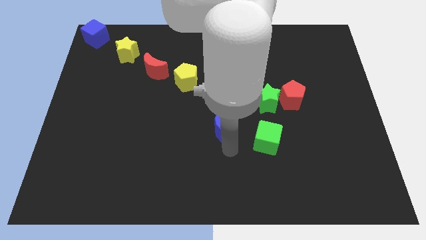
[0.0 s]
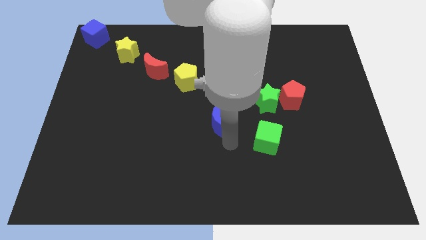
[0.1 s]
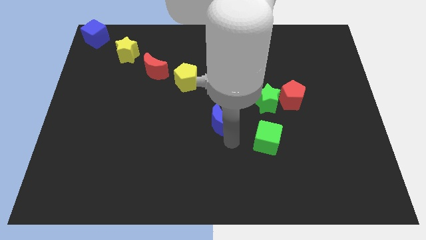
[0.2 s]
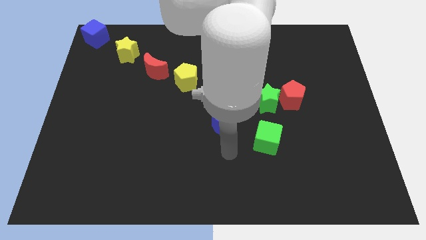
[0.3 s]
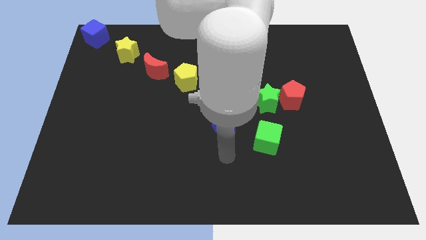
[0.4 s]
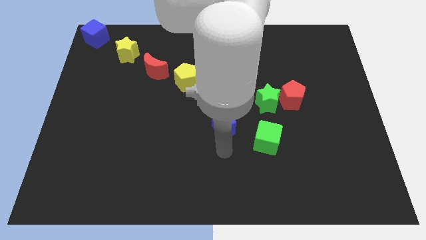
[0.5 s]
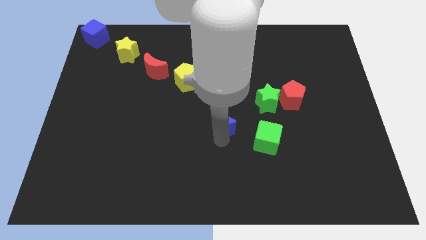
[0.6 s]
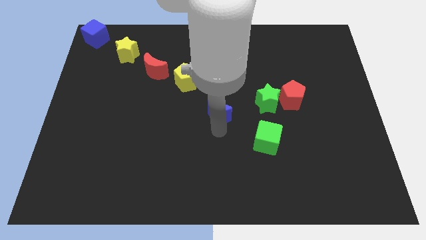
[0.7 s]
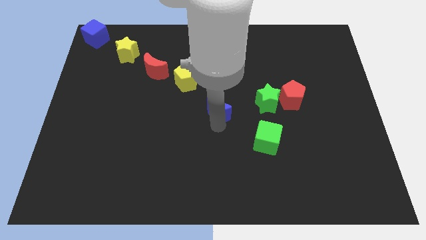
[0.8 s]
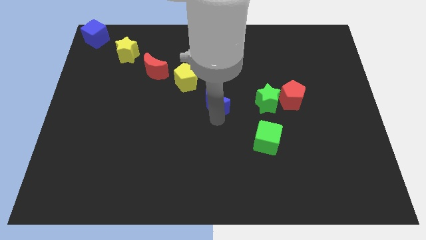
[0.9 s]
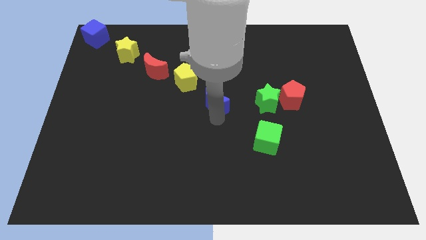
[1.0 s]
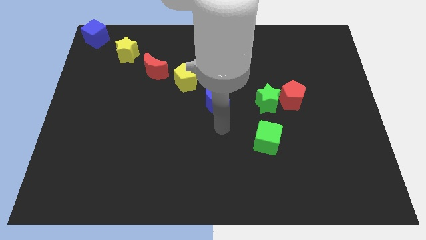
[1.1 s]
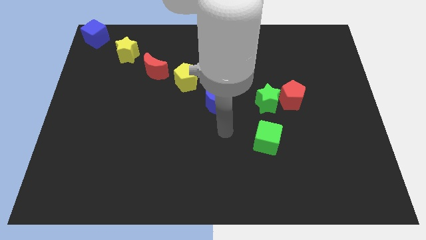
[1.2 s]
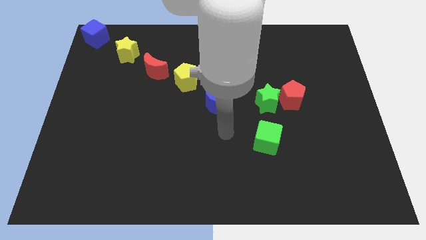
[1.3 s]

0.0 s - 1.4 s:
move the blue crescent to the center of the board

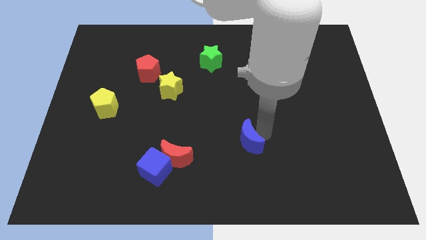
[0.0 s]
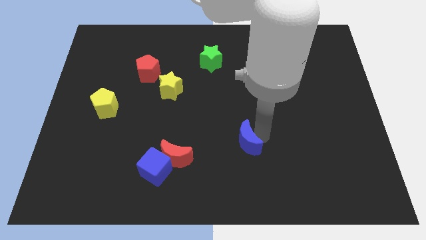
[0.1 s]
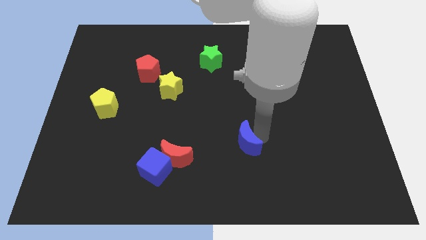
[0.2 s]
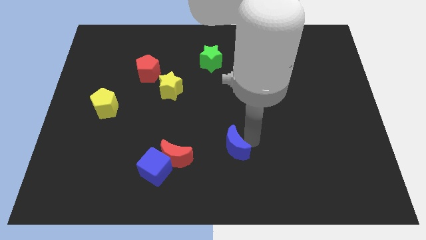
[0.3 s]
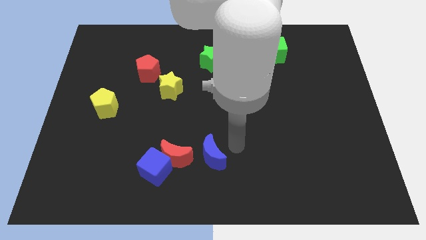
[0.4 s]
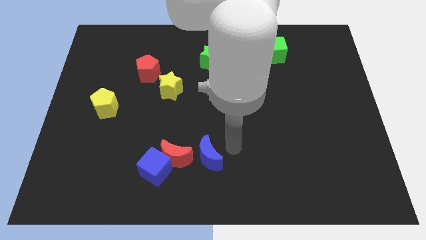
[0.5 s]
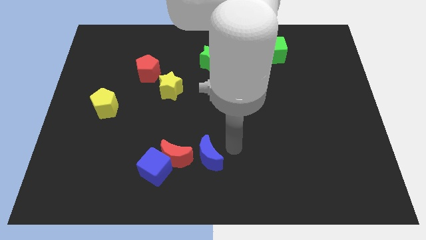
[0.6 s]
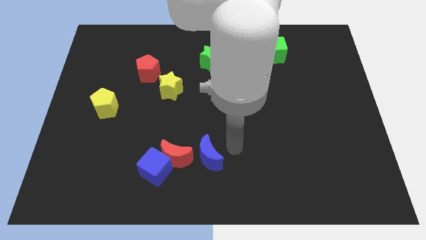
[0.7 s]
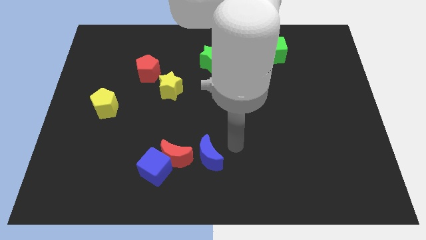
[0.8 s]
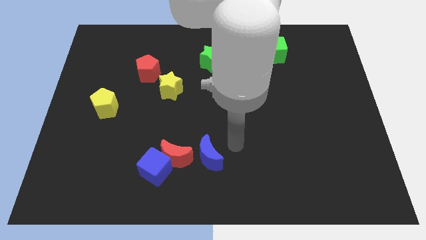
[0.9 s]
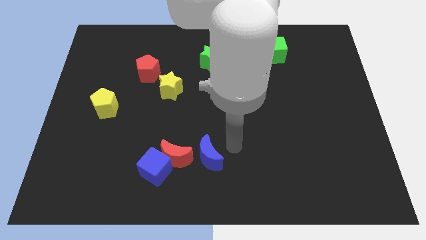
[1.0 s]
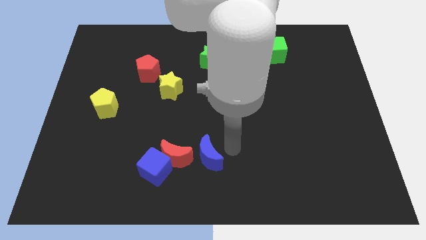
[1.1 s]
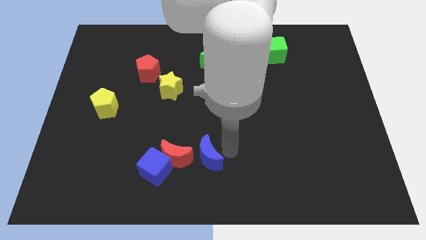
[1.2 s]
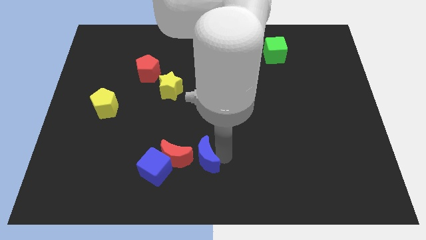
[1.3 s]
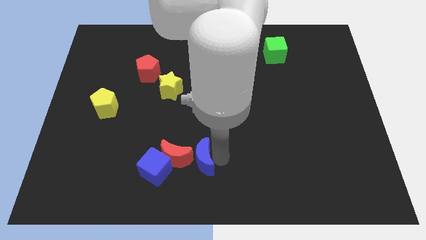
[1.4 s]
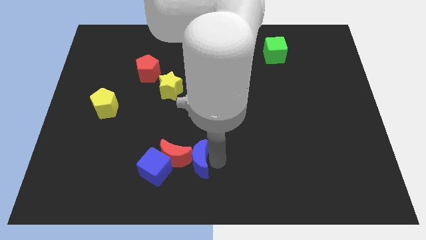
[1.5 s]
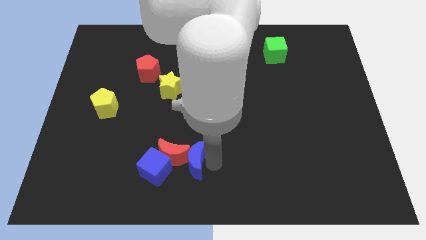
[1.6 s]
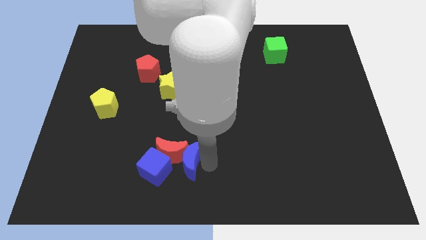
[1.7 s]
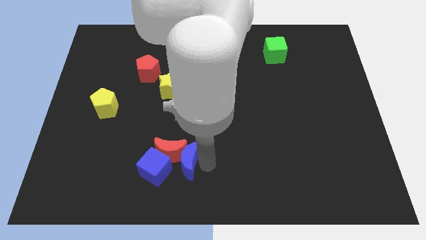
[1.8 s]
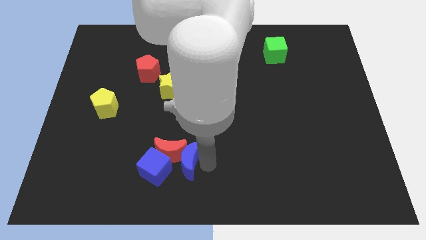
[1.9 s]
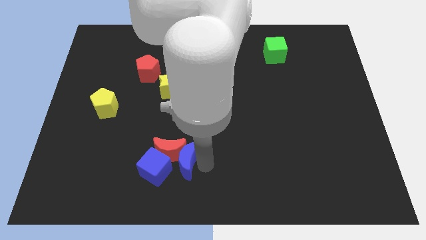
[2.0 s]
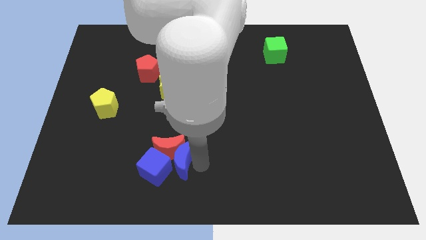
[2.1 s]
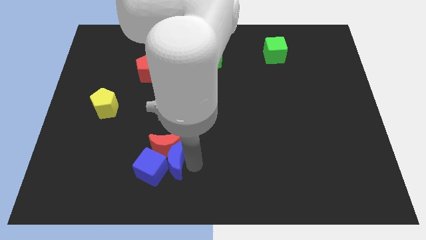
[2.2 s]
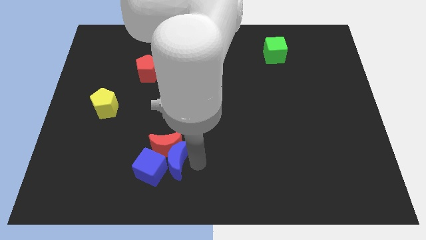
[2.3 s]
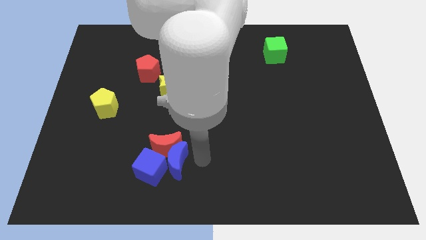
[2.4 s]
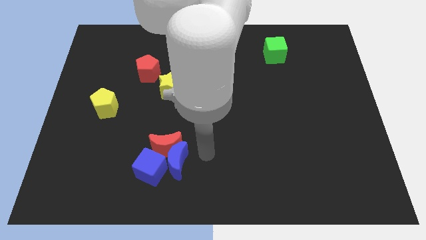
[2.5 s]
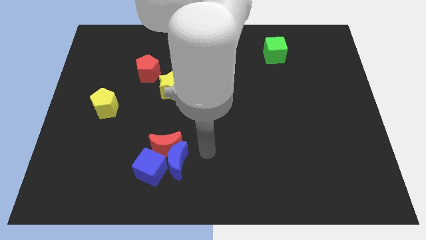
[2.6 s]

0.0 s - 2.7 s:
move the blue moon into the red moon

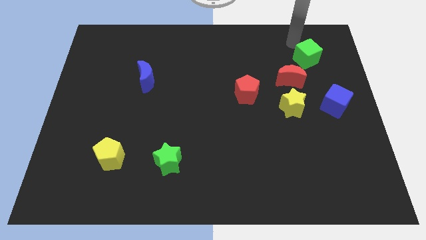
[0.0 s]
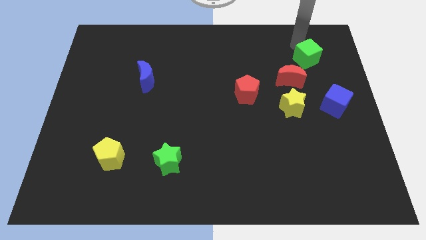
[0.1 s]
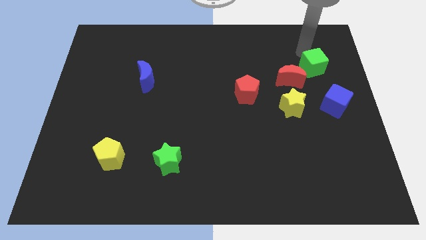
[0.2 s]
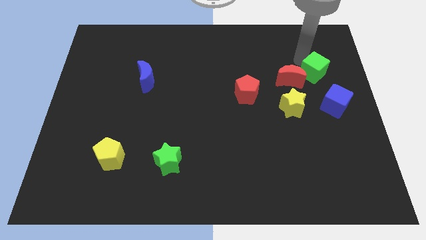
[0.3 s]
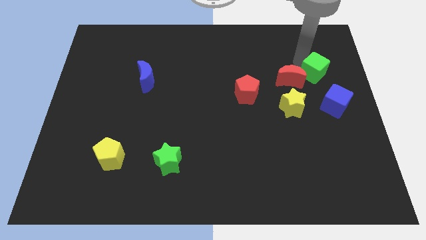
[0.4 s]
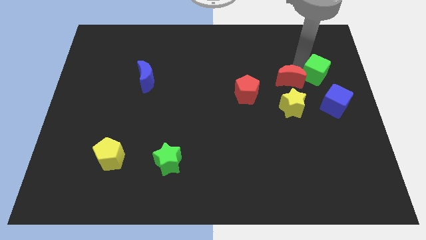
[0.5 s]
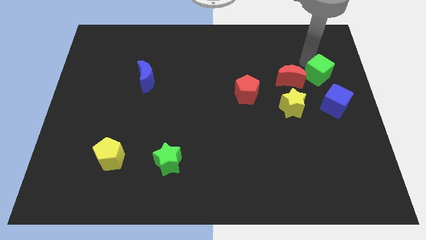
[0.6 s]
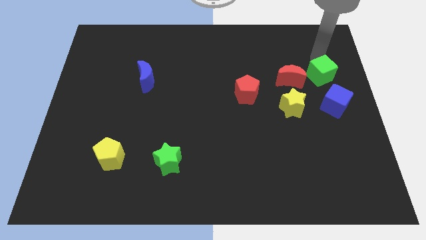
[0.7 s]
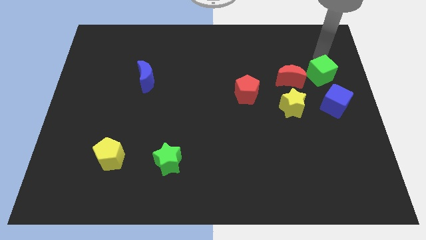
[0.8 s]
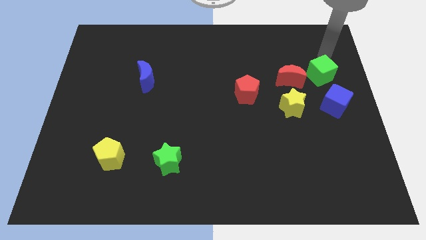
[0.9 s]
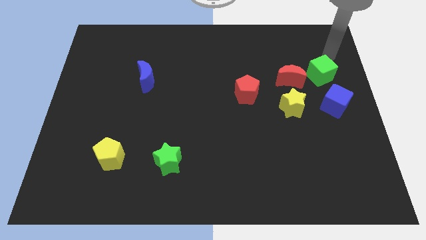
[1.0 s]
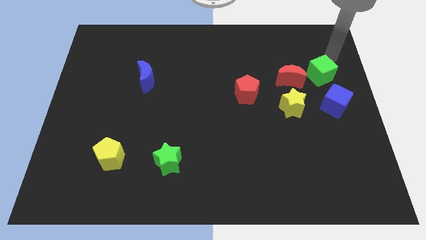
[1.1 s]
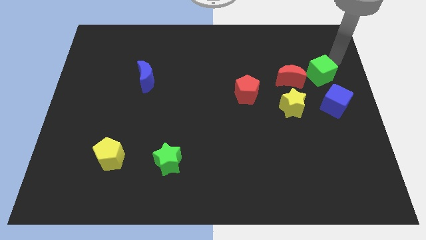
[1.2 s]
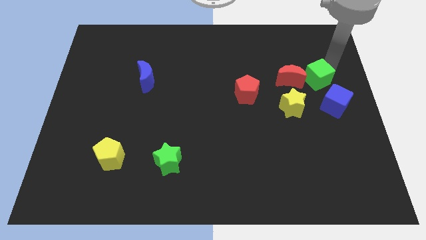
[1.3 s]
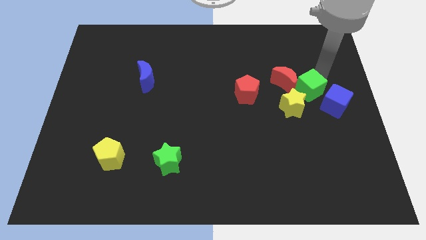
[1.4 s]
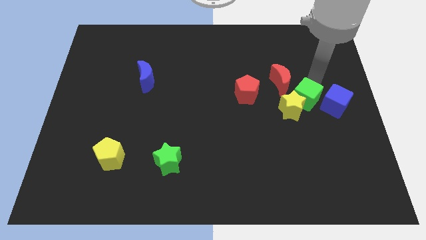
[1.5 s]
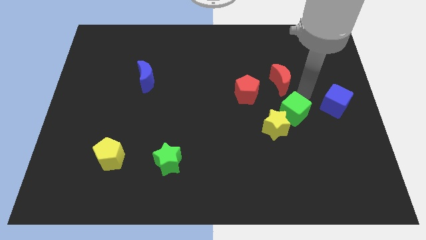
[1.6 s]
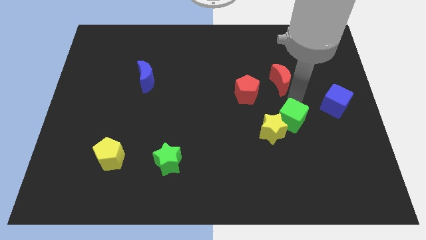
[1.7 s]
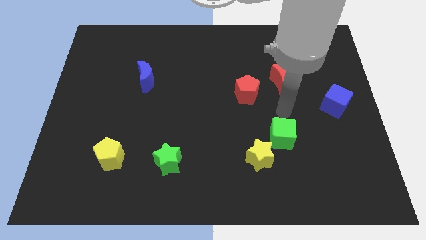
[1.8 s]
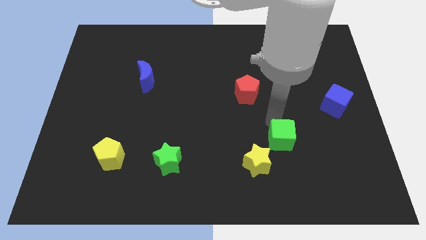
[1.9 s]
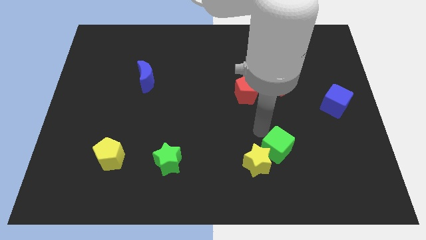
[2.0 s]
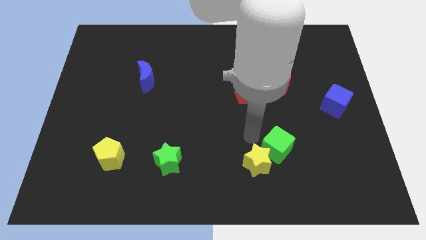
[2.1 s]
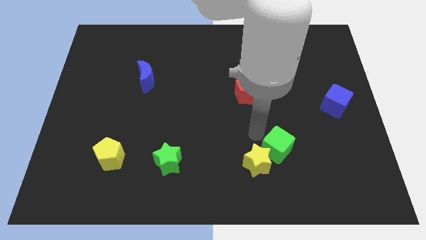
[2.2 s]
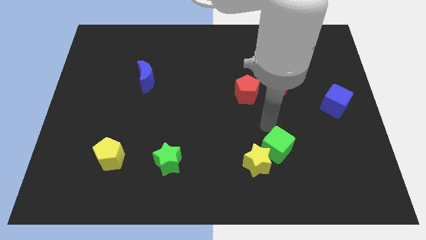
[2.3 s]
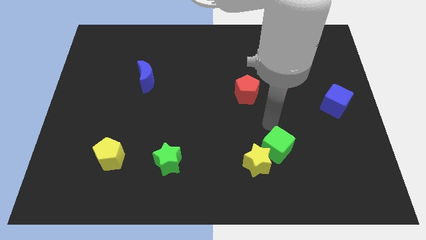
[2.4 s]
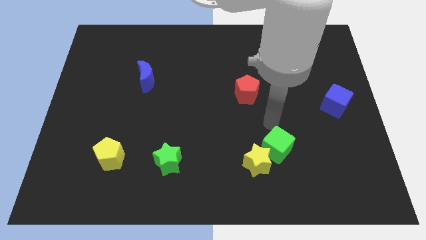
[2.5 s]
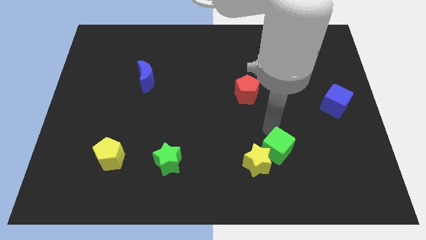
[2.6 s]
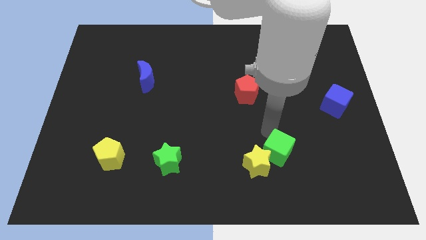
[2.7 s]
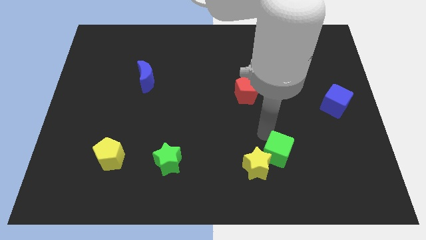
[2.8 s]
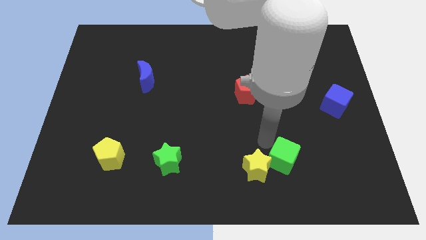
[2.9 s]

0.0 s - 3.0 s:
push the green cube and yellow star to the right of the green star

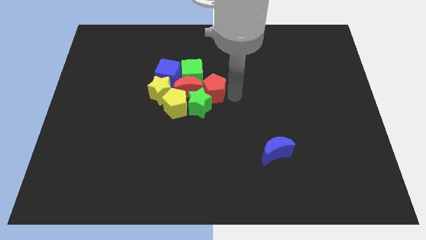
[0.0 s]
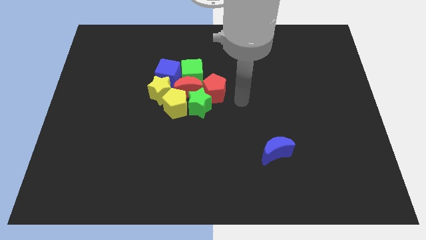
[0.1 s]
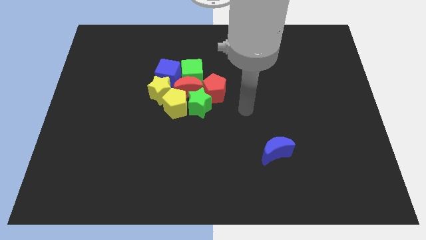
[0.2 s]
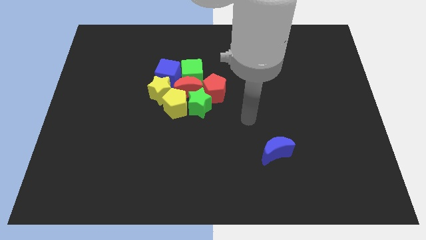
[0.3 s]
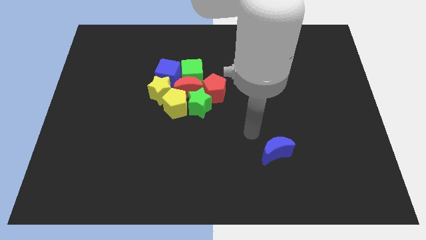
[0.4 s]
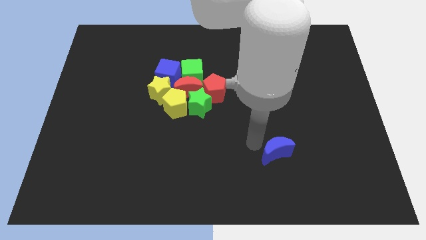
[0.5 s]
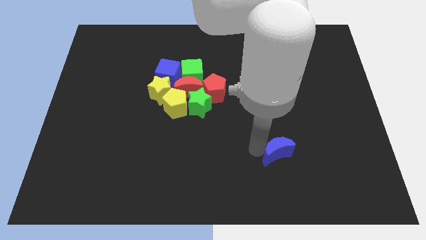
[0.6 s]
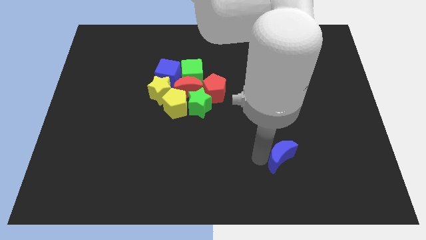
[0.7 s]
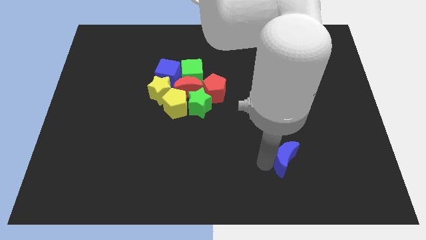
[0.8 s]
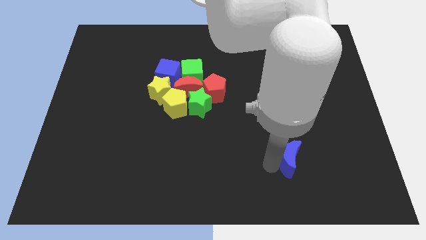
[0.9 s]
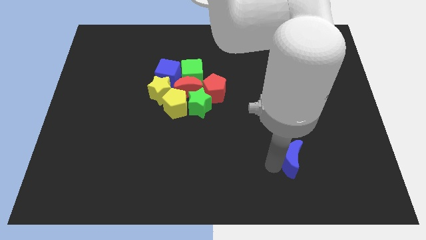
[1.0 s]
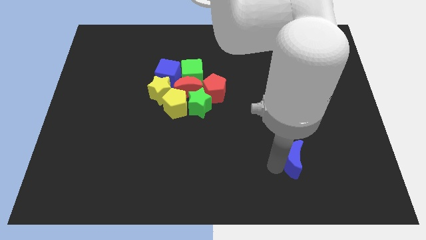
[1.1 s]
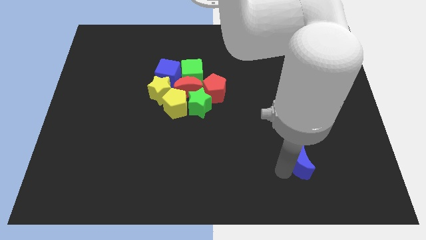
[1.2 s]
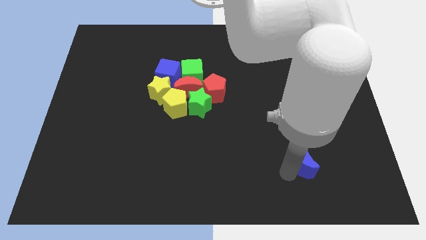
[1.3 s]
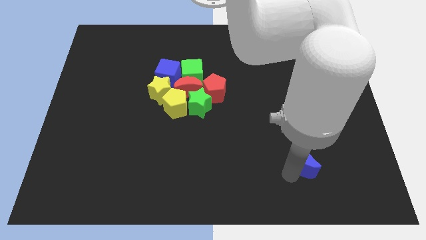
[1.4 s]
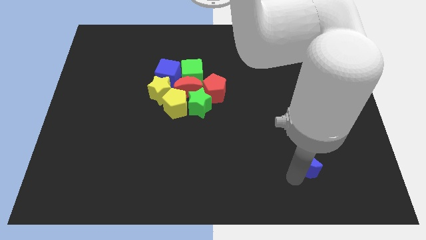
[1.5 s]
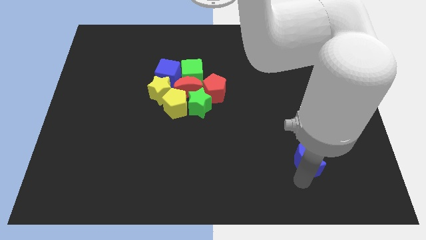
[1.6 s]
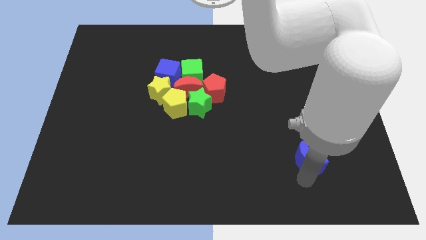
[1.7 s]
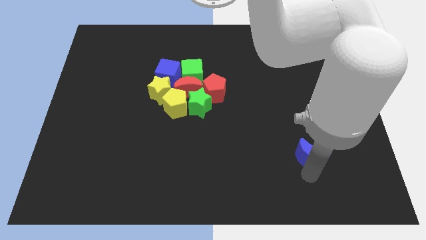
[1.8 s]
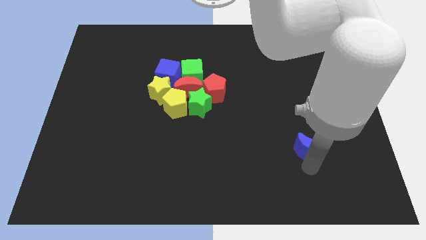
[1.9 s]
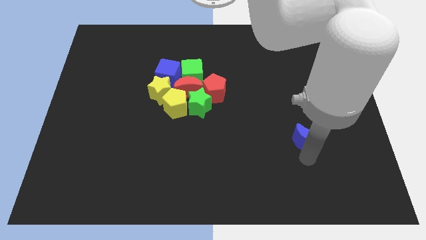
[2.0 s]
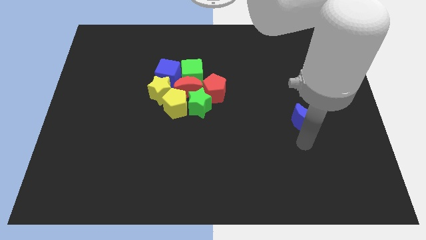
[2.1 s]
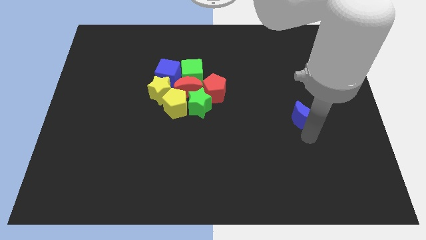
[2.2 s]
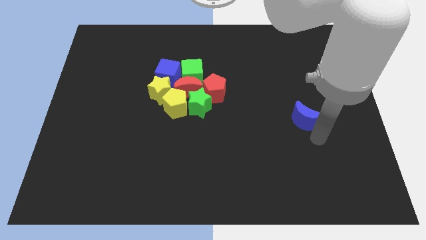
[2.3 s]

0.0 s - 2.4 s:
push the blue crescent slightly to the right center of the board
